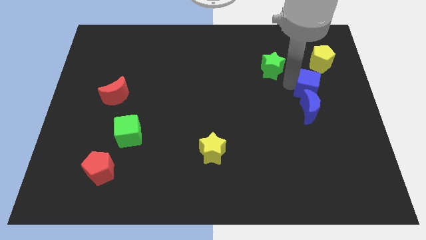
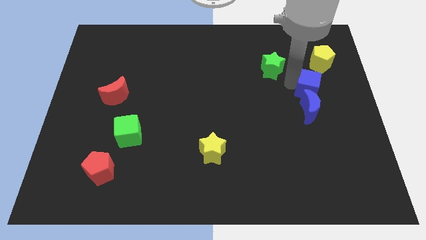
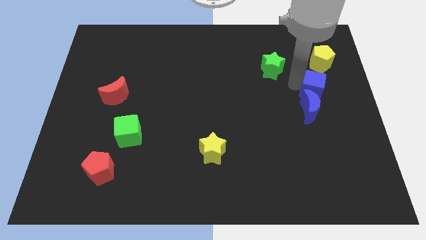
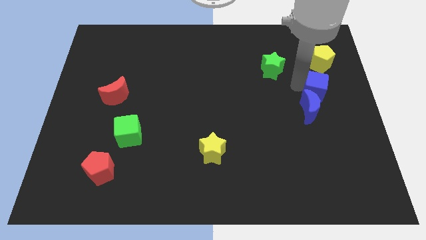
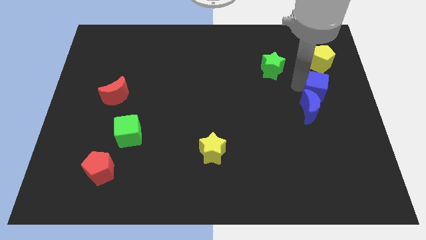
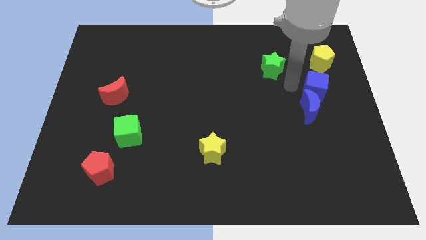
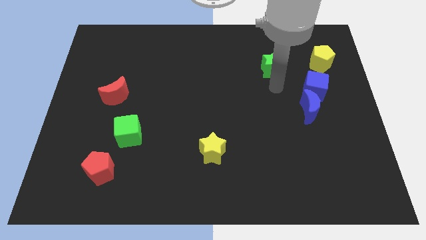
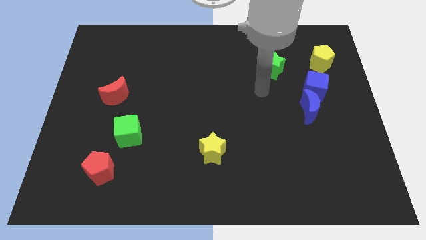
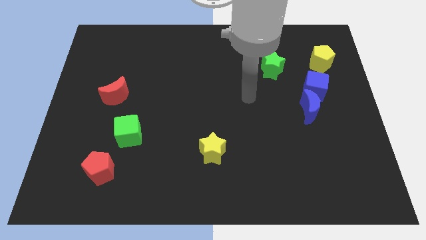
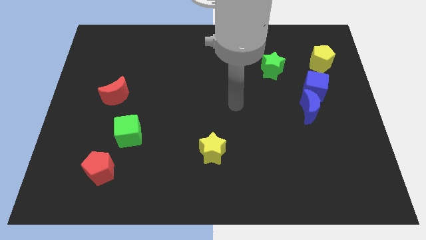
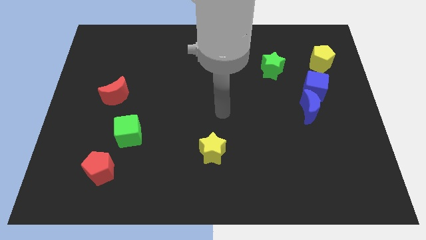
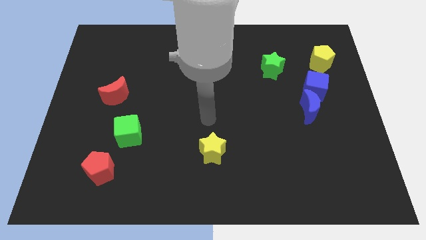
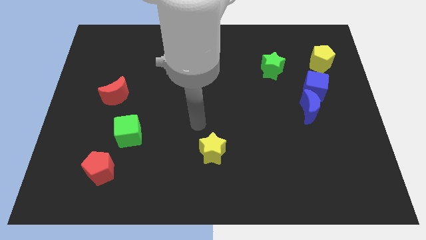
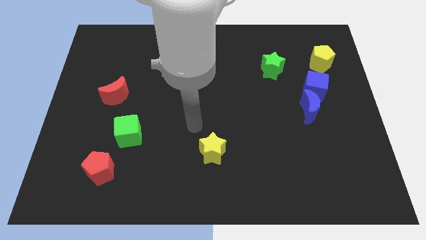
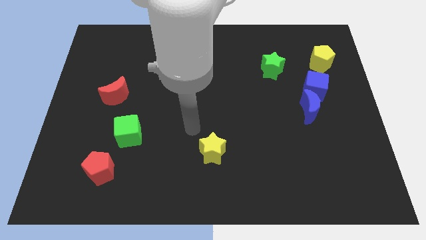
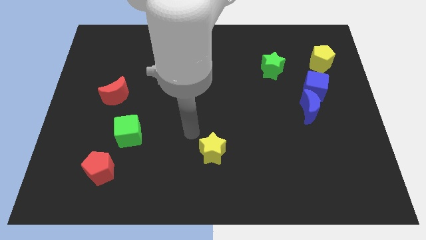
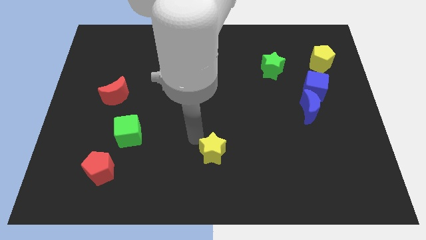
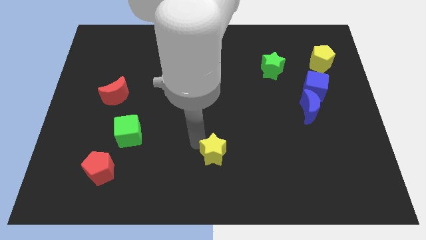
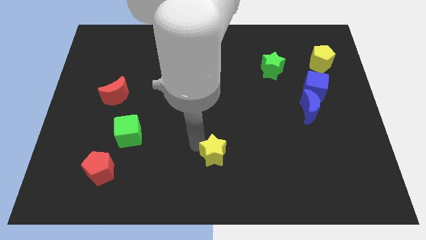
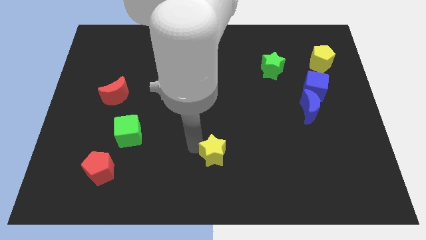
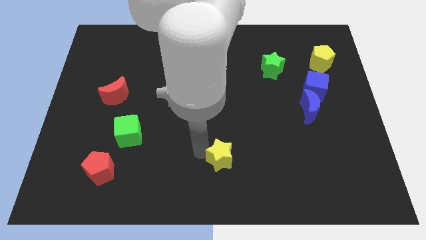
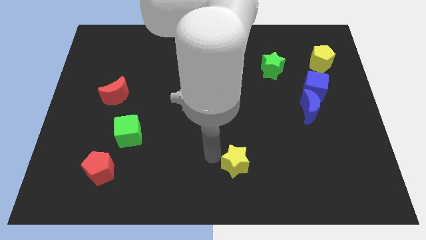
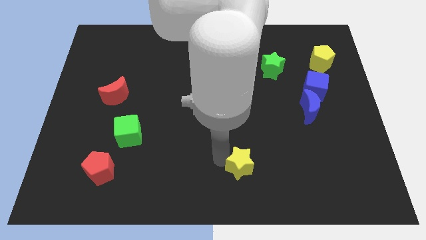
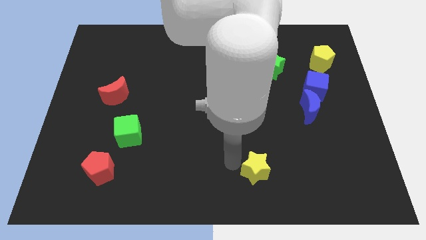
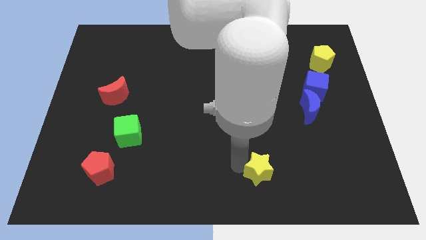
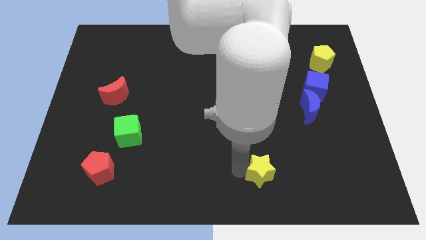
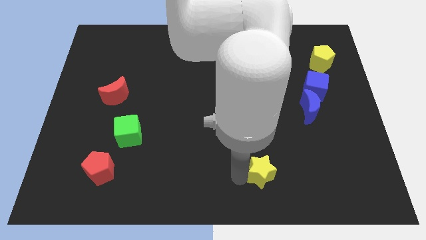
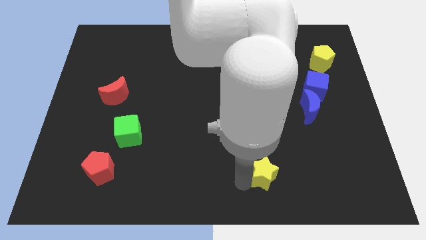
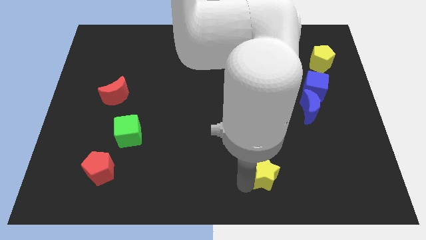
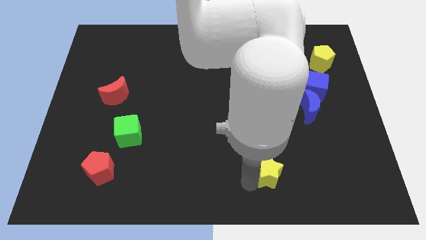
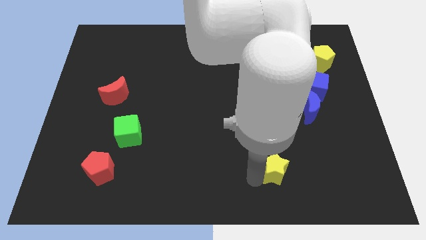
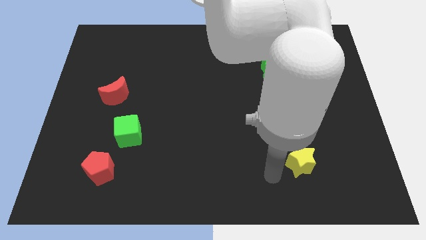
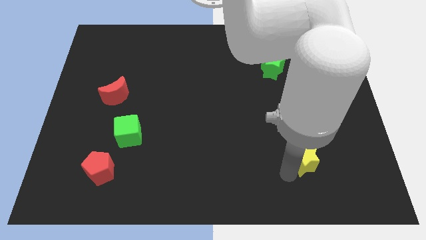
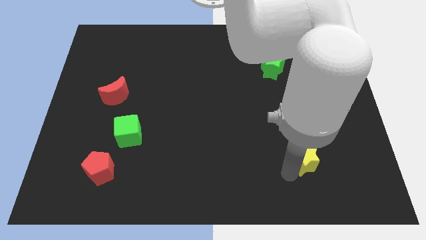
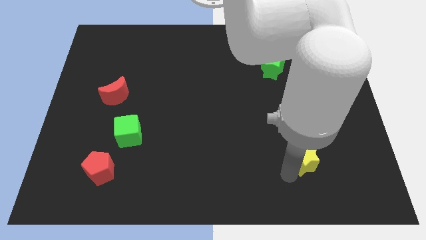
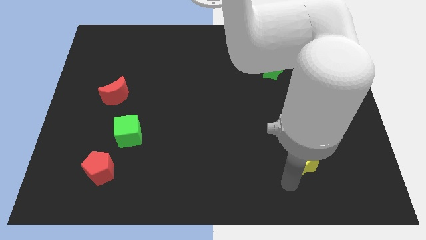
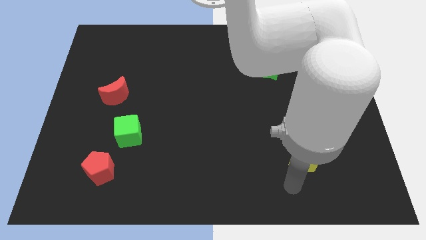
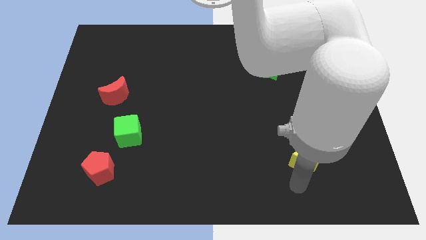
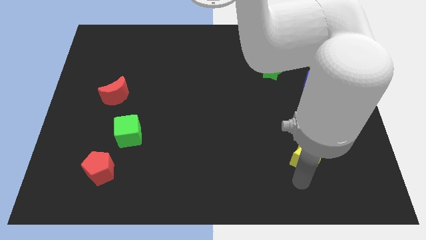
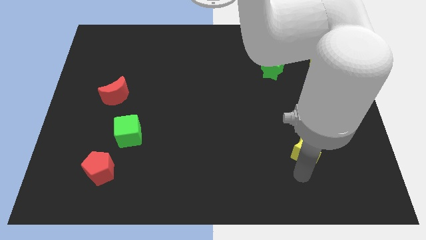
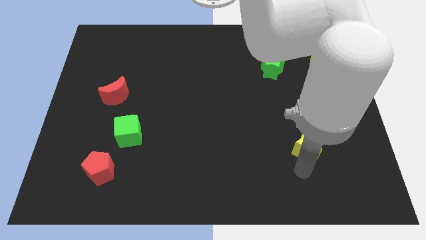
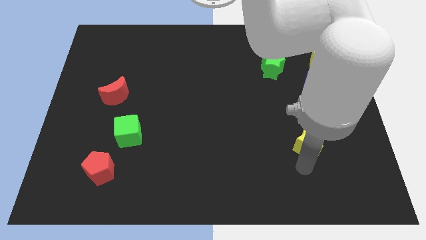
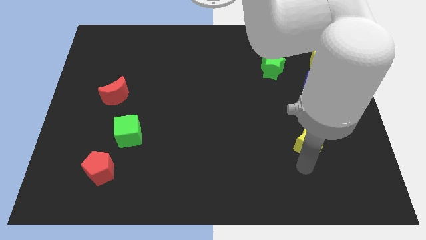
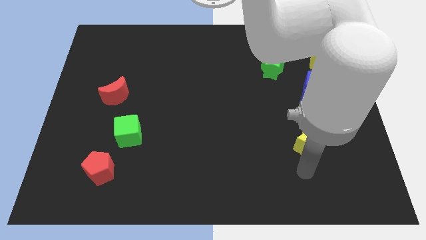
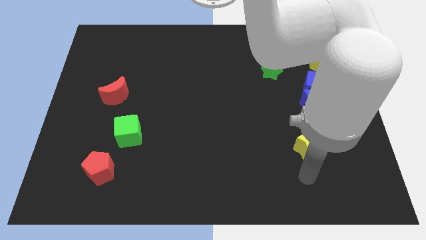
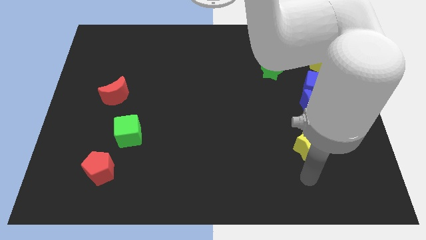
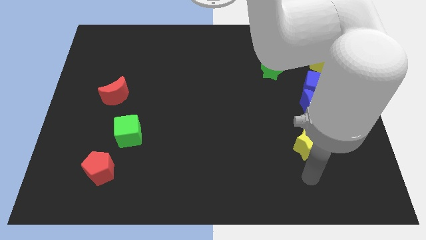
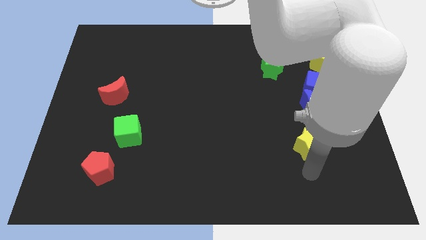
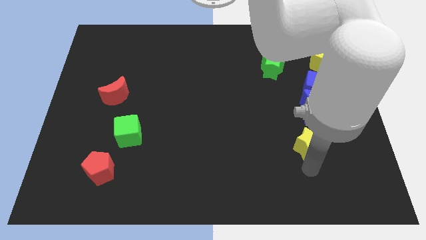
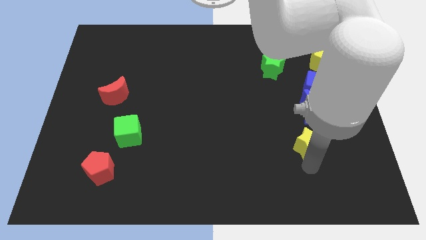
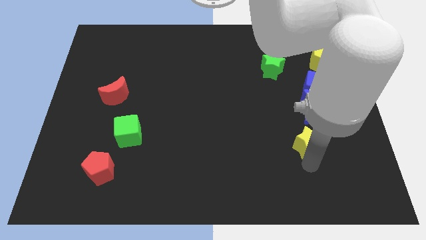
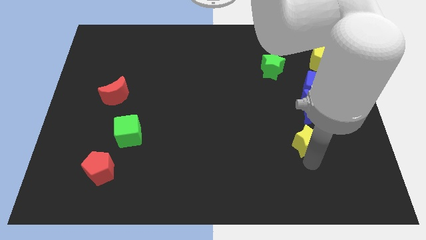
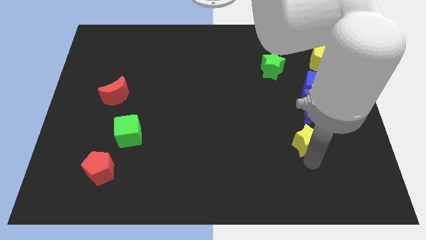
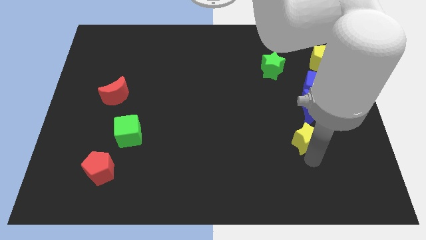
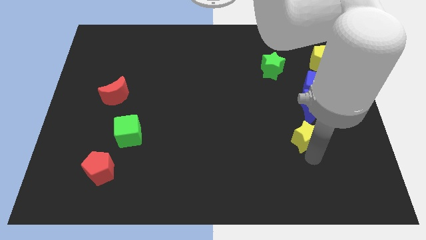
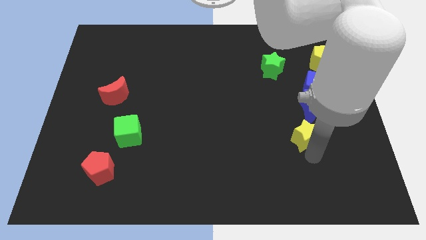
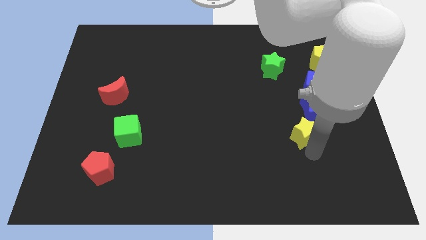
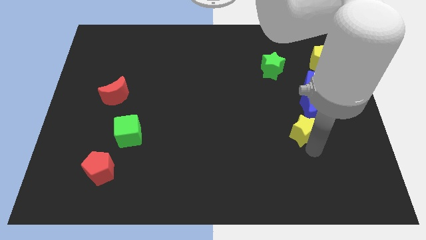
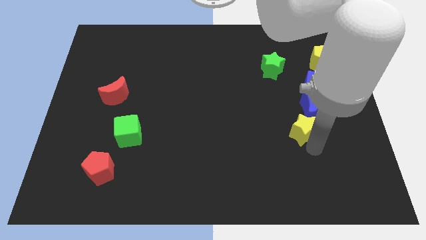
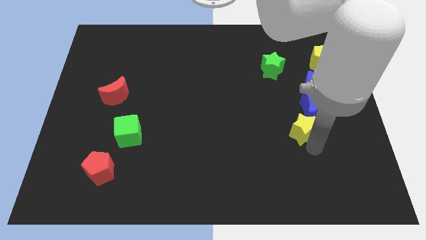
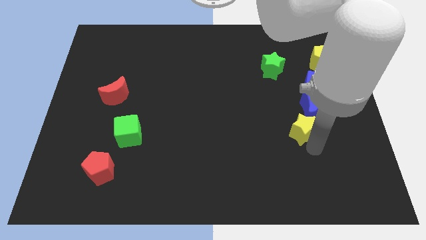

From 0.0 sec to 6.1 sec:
move the yellow star below the blue moon

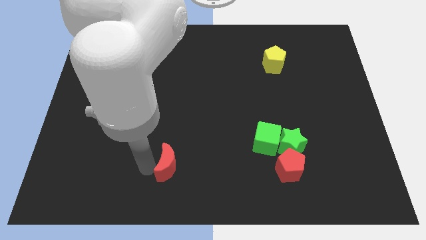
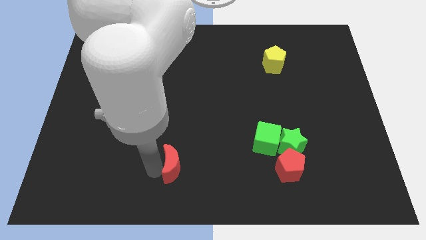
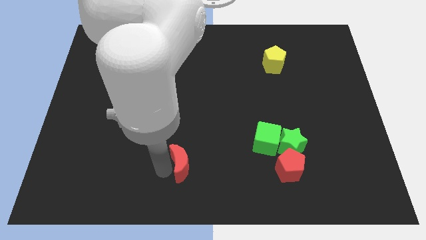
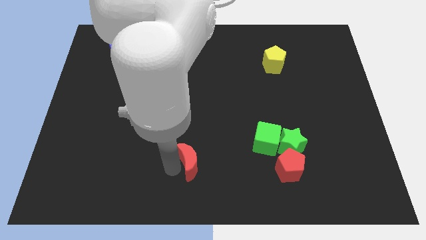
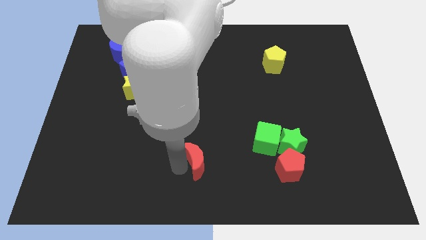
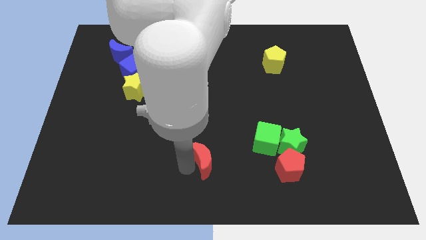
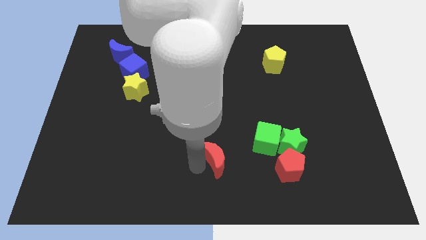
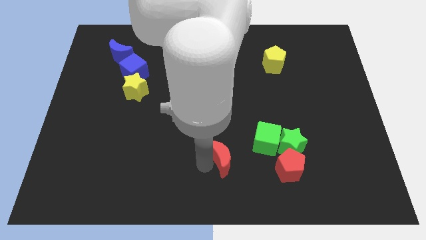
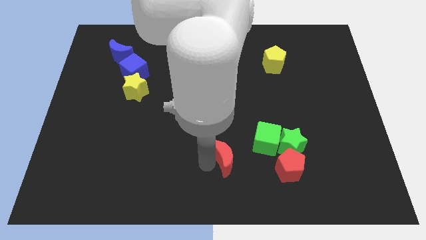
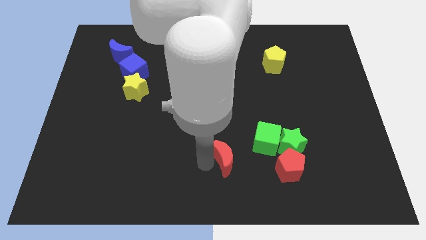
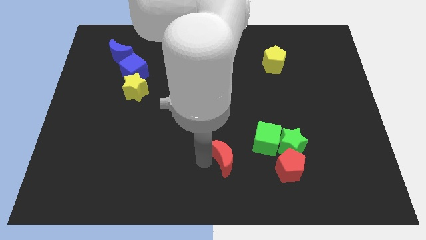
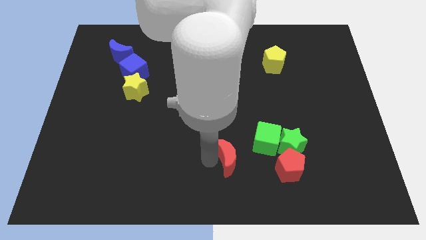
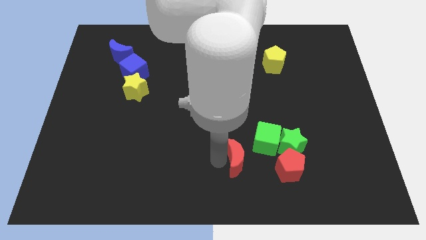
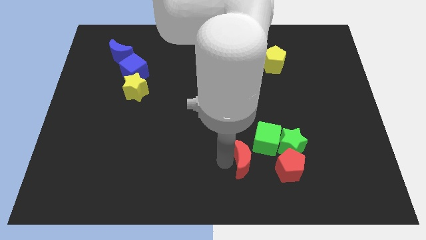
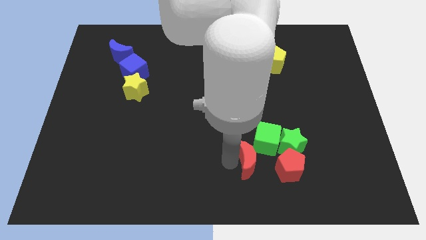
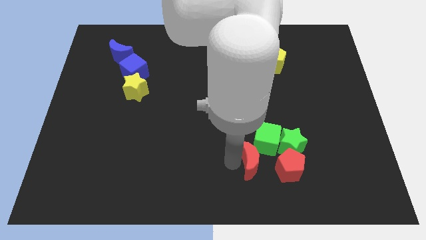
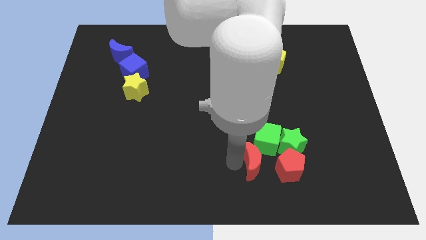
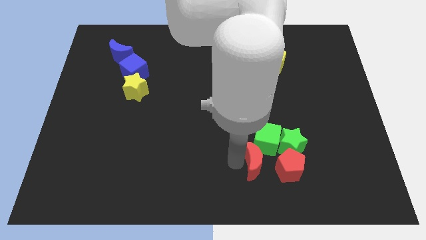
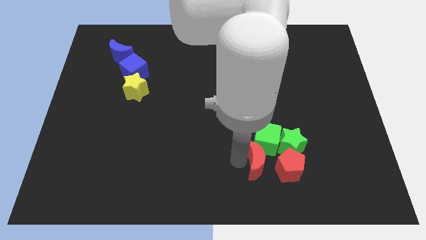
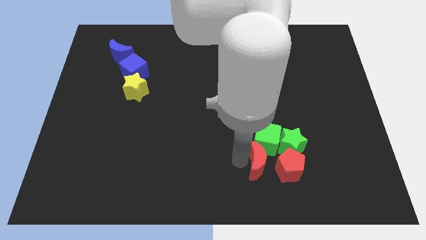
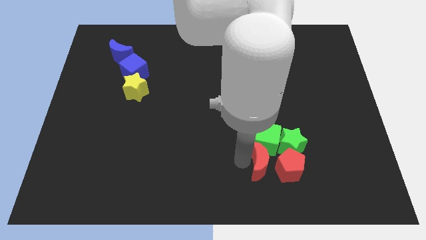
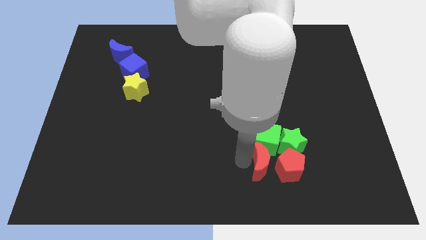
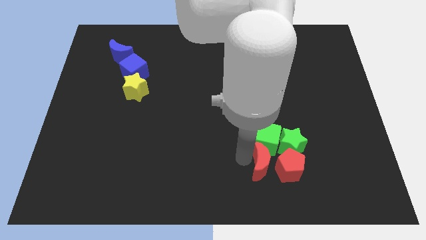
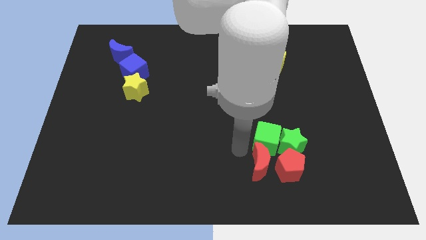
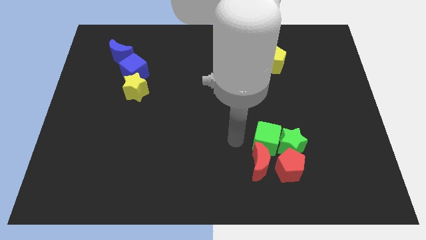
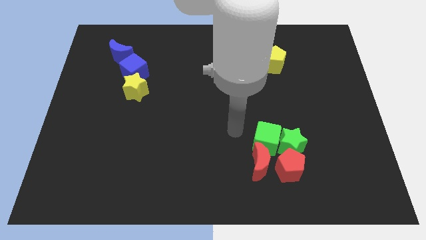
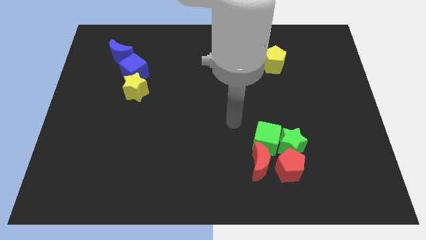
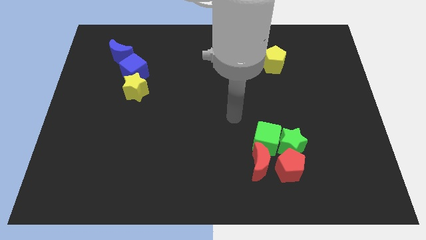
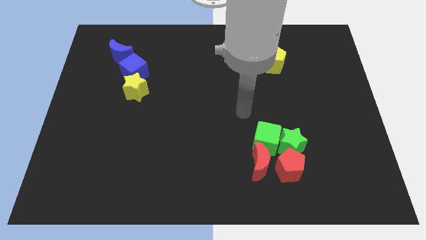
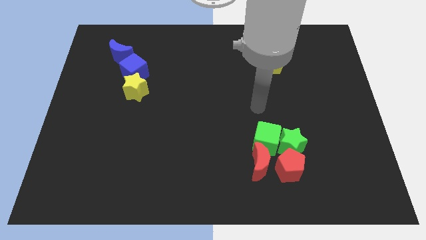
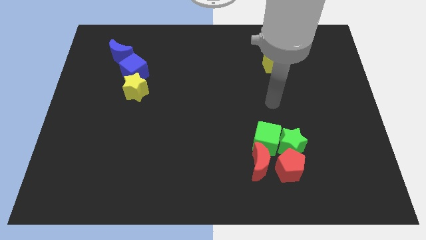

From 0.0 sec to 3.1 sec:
move red moon left to the red pentagon
